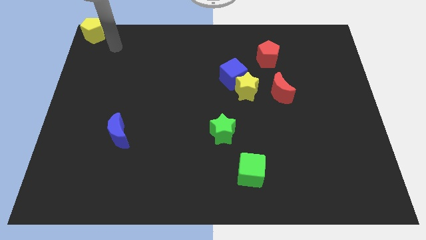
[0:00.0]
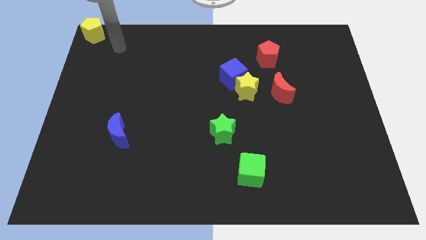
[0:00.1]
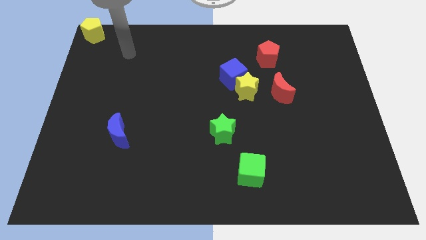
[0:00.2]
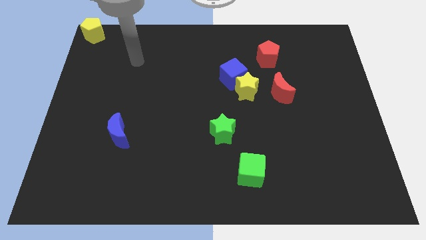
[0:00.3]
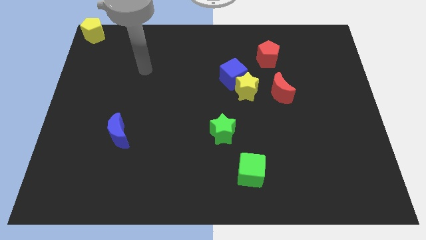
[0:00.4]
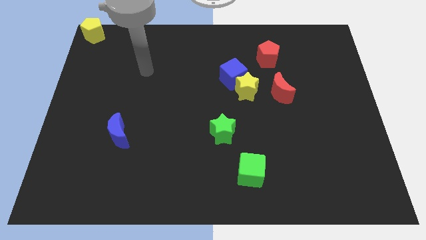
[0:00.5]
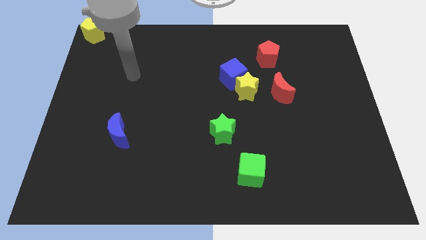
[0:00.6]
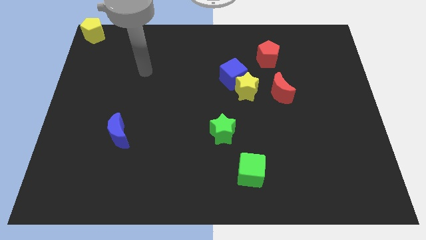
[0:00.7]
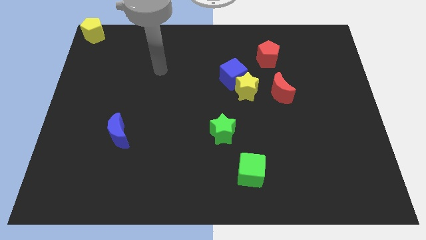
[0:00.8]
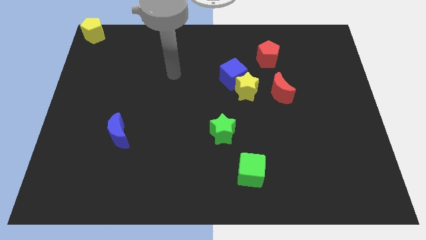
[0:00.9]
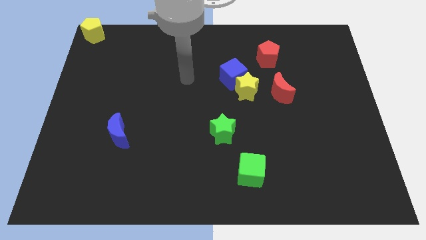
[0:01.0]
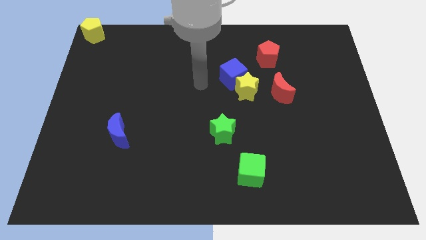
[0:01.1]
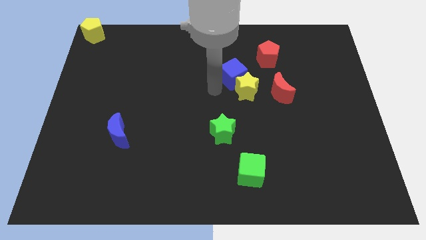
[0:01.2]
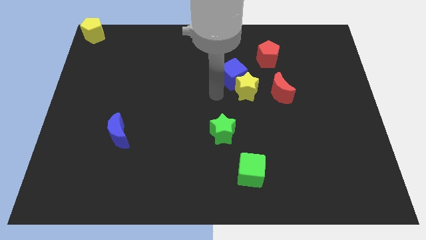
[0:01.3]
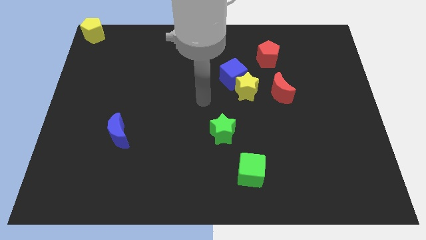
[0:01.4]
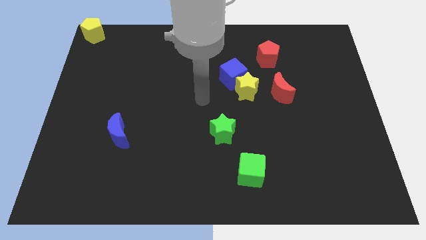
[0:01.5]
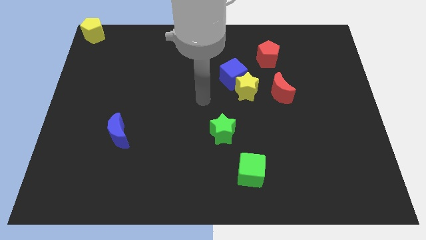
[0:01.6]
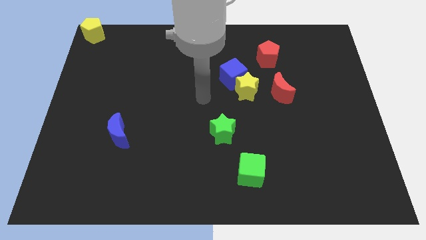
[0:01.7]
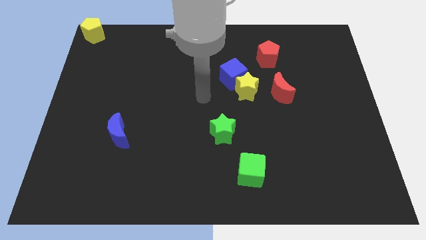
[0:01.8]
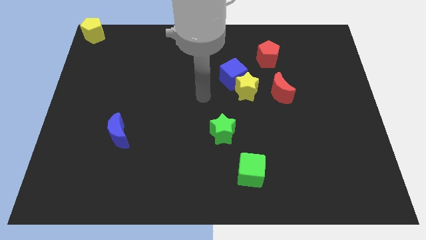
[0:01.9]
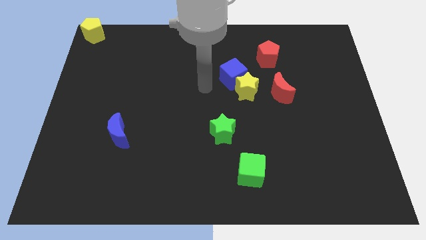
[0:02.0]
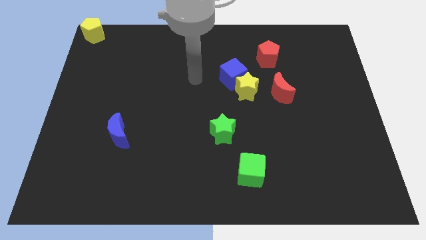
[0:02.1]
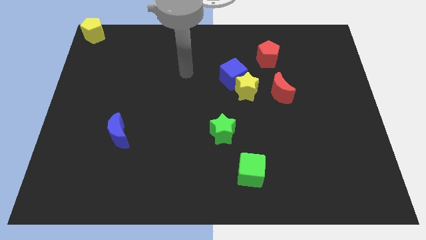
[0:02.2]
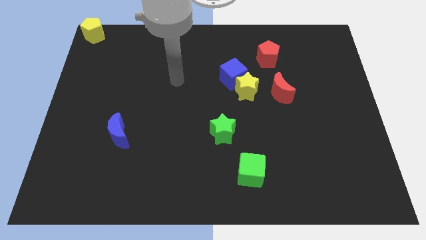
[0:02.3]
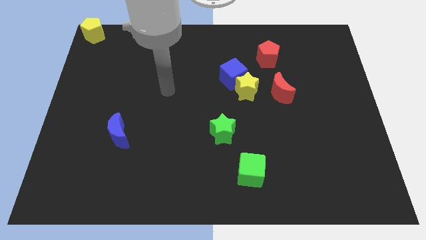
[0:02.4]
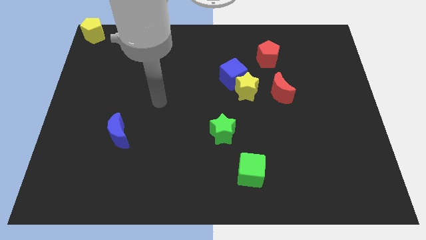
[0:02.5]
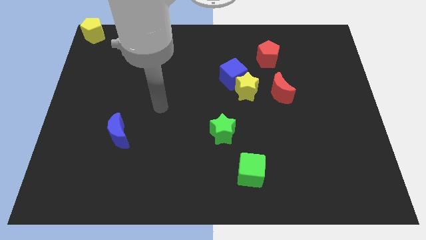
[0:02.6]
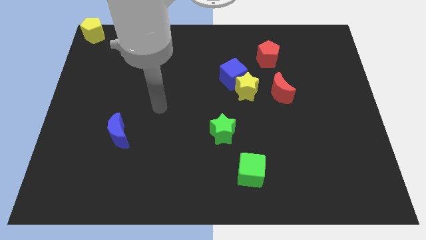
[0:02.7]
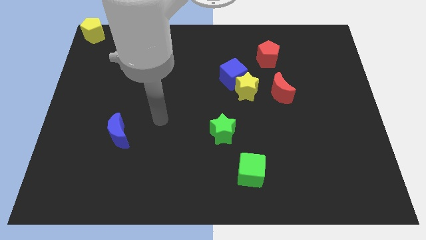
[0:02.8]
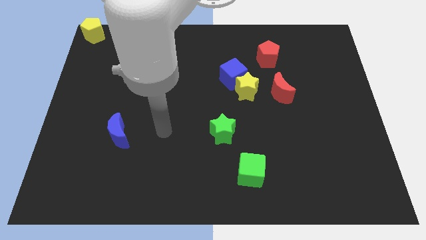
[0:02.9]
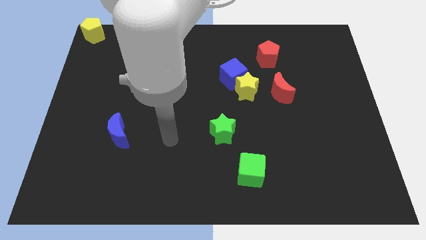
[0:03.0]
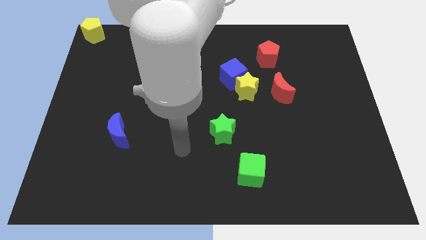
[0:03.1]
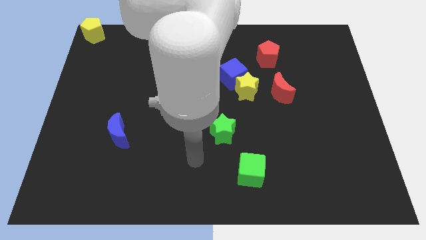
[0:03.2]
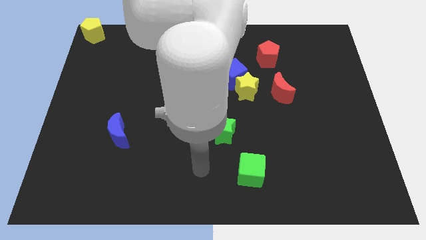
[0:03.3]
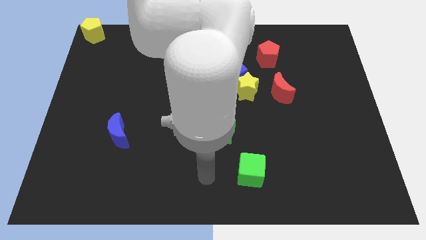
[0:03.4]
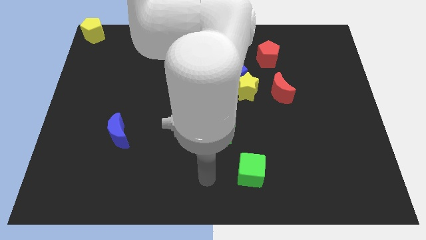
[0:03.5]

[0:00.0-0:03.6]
point the arm to the left of the green cube

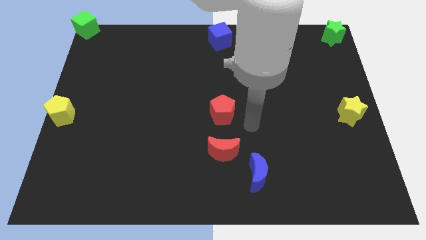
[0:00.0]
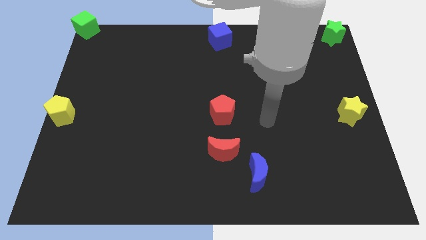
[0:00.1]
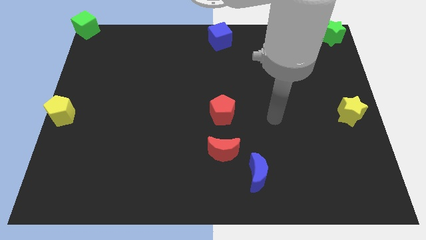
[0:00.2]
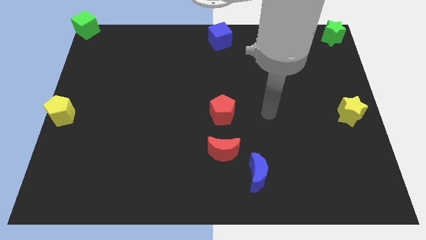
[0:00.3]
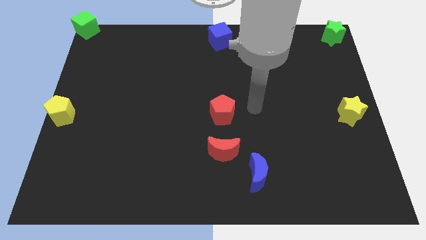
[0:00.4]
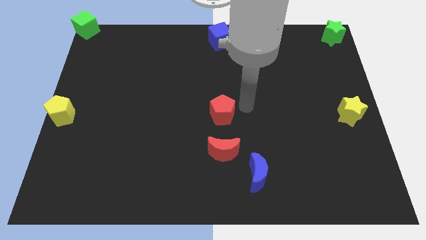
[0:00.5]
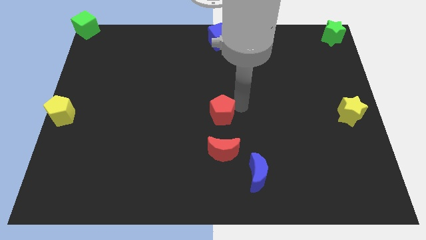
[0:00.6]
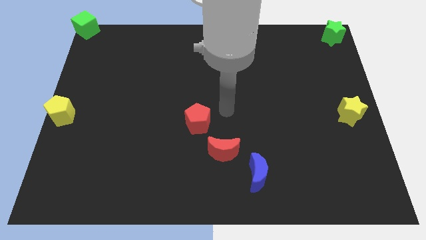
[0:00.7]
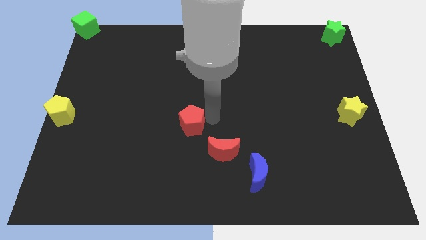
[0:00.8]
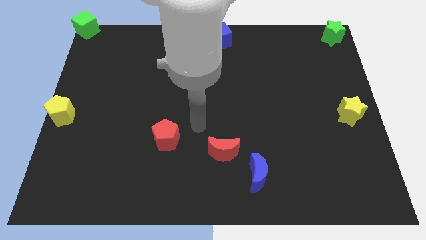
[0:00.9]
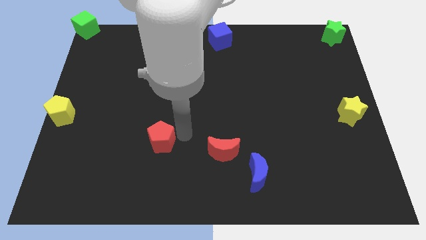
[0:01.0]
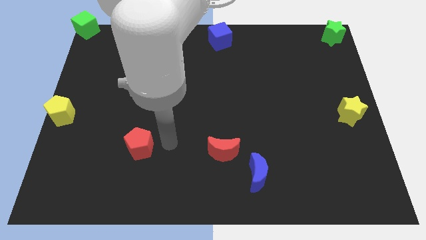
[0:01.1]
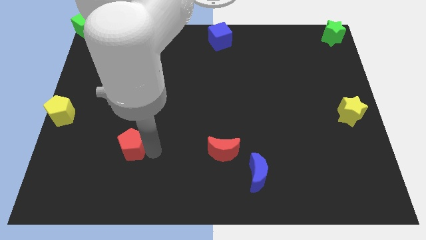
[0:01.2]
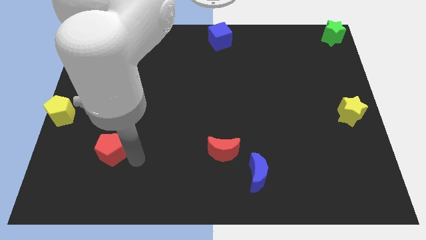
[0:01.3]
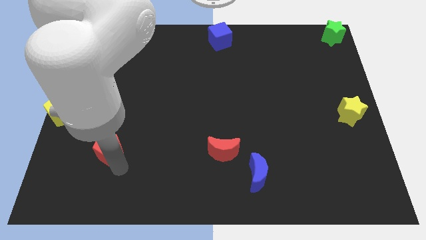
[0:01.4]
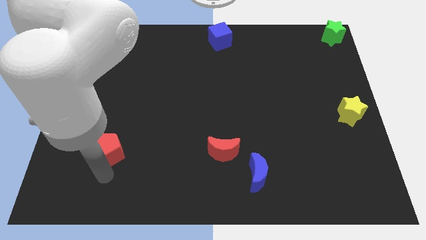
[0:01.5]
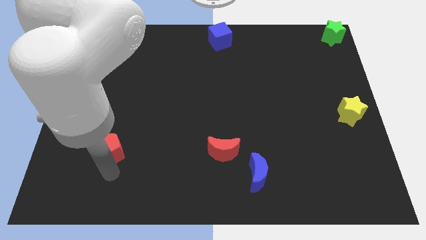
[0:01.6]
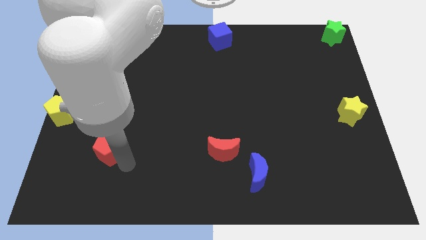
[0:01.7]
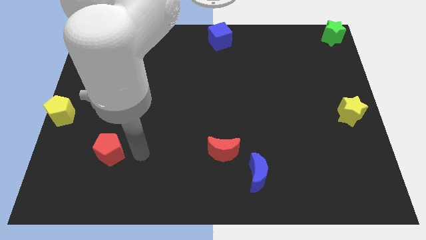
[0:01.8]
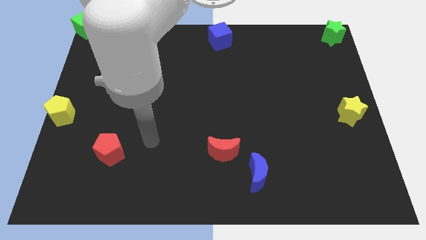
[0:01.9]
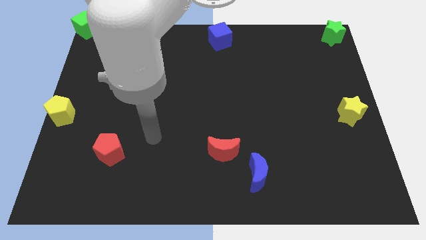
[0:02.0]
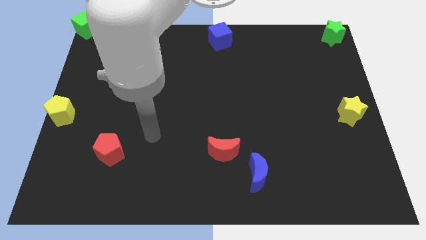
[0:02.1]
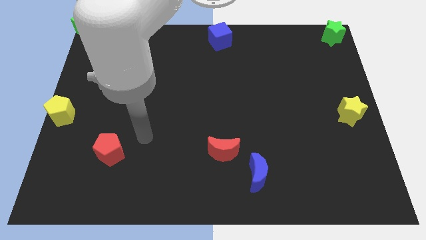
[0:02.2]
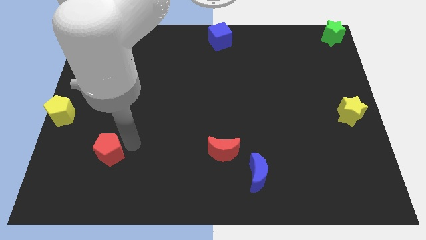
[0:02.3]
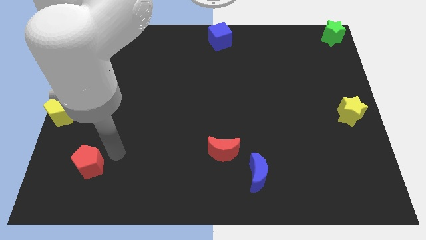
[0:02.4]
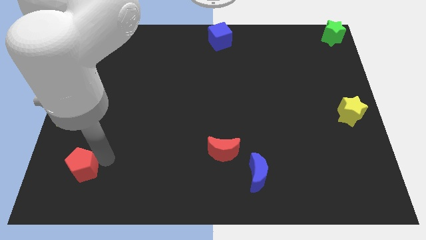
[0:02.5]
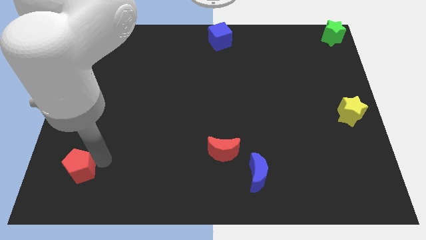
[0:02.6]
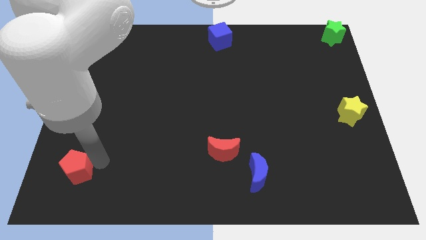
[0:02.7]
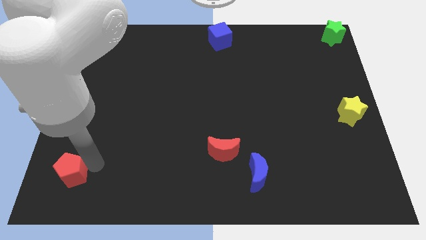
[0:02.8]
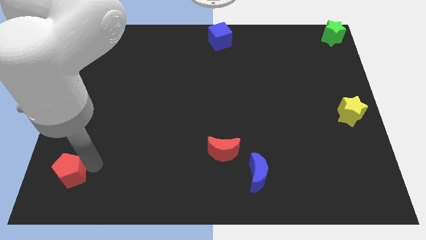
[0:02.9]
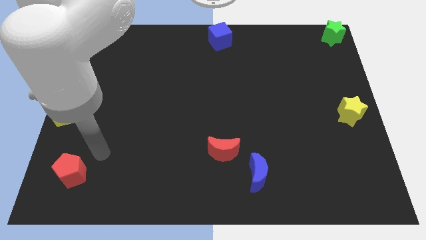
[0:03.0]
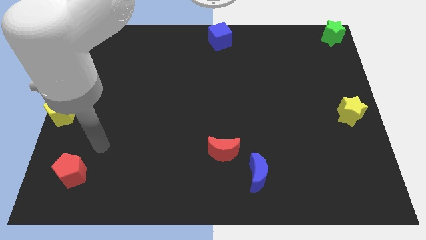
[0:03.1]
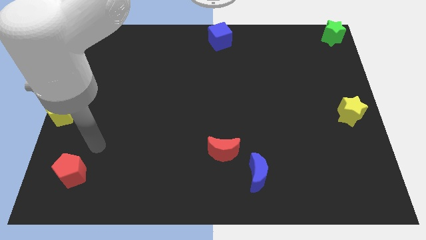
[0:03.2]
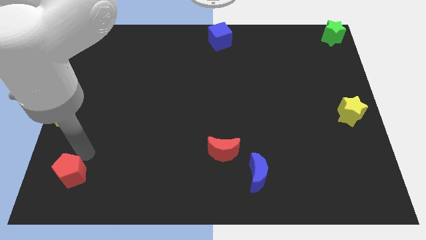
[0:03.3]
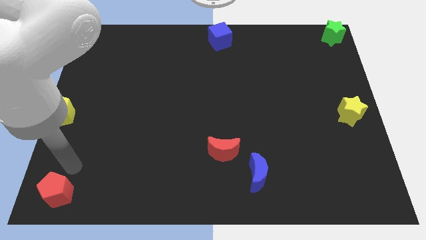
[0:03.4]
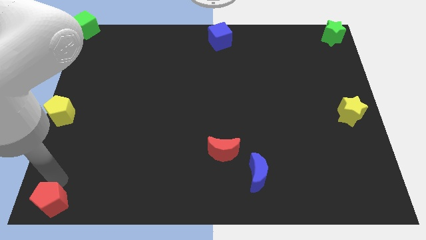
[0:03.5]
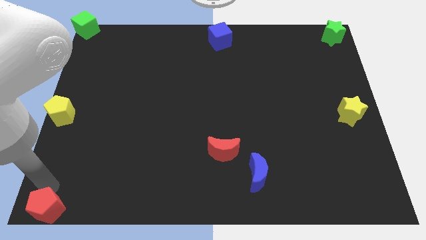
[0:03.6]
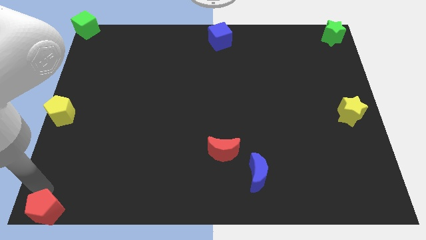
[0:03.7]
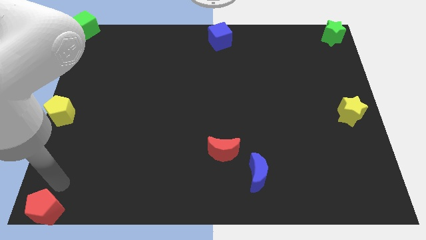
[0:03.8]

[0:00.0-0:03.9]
push the red pentagon to the bottom left

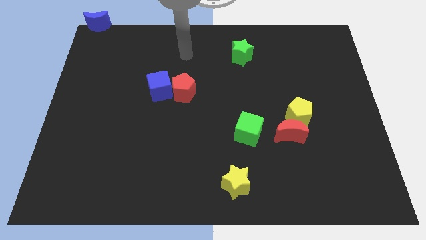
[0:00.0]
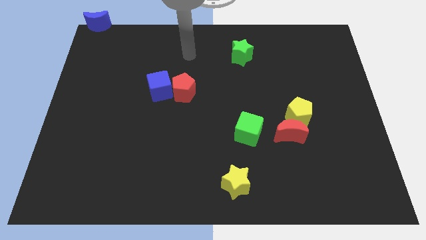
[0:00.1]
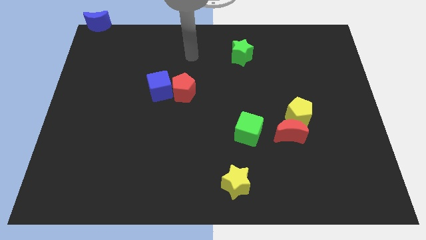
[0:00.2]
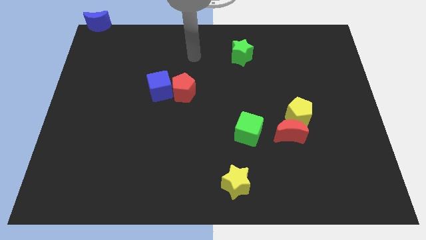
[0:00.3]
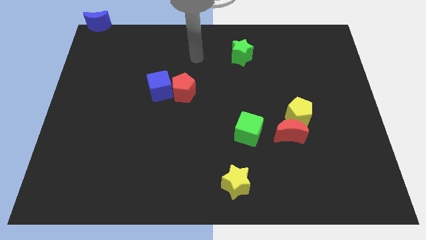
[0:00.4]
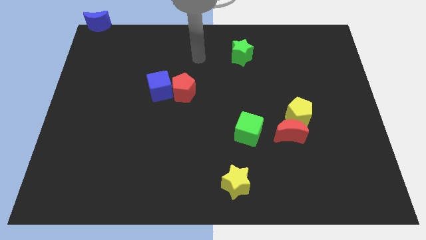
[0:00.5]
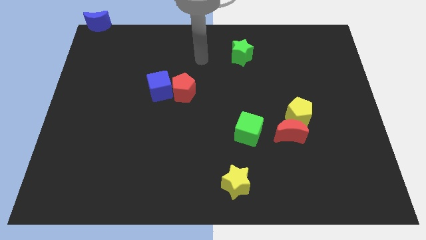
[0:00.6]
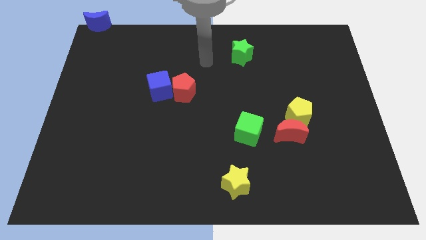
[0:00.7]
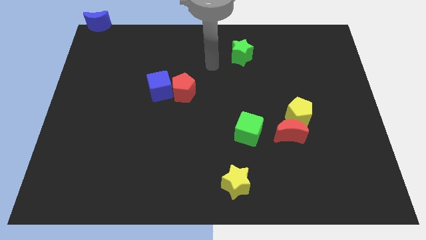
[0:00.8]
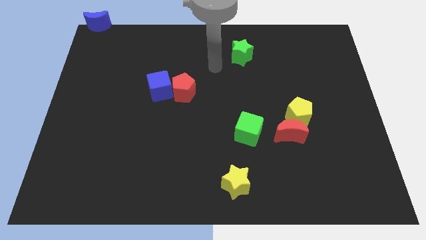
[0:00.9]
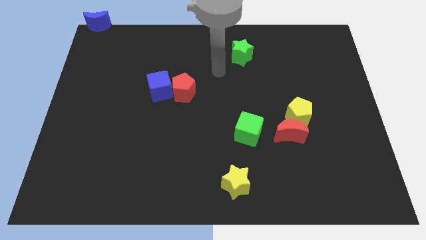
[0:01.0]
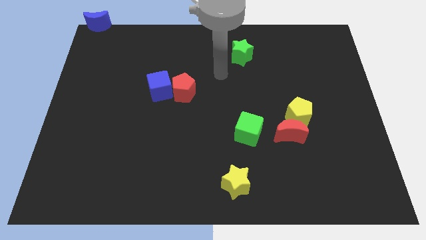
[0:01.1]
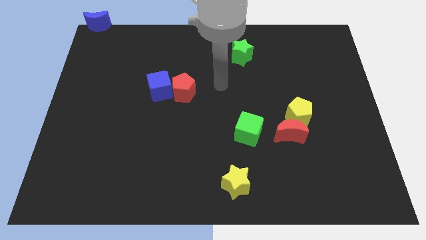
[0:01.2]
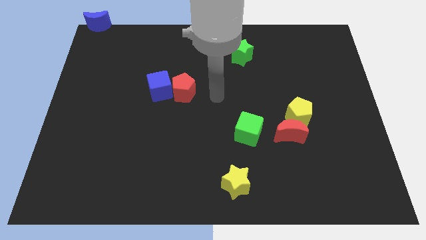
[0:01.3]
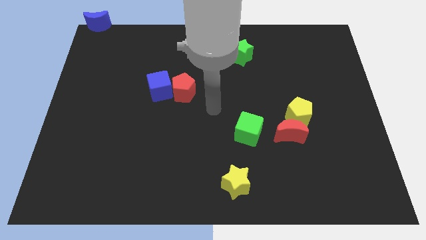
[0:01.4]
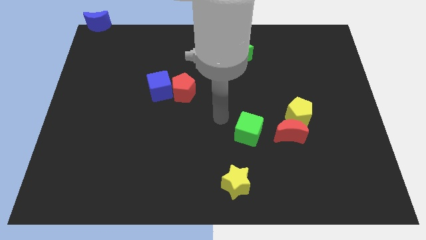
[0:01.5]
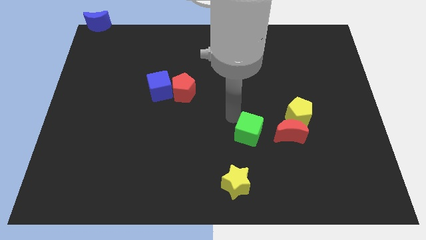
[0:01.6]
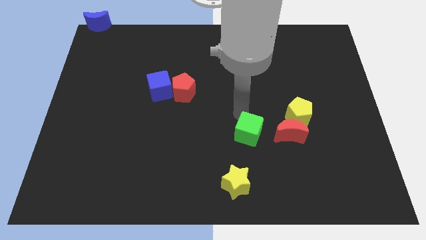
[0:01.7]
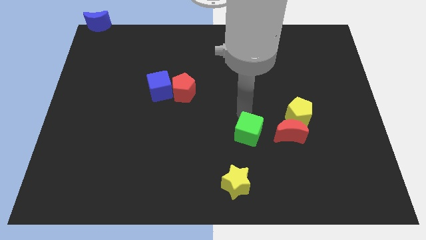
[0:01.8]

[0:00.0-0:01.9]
move your arm to the top of the green cube
